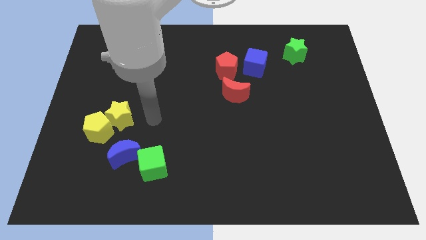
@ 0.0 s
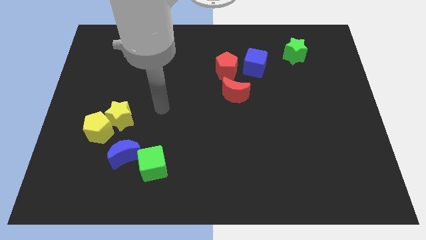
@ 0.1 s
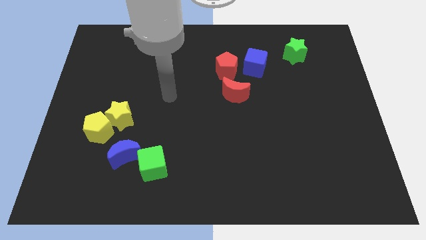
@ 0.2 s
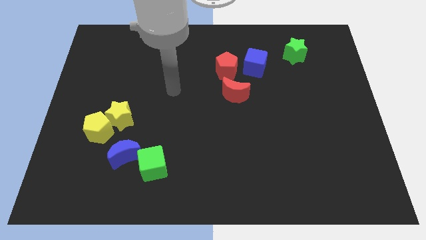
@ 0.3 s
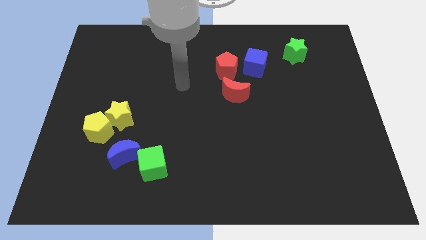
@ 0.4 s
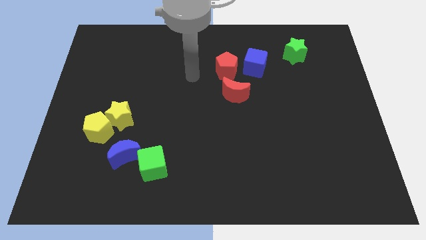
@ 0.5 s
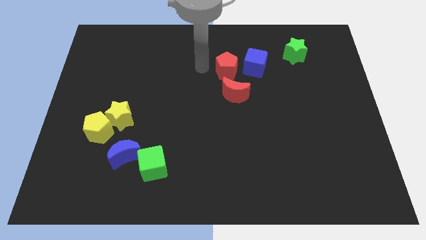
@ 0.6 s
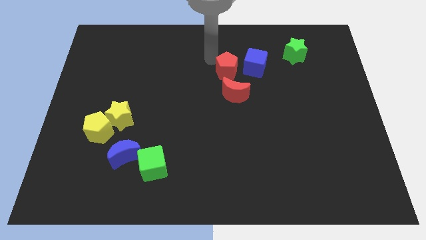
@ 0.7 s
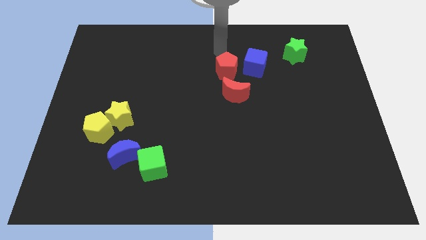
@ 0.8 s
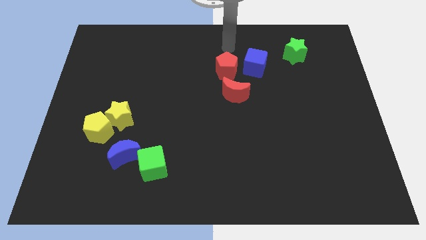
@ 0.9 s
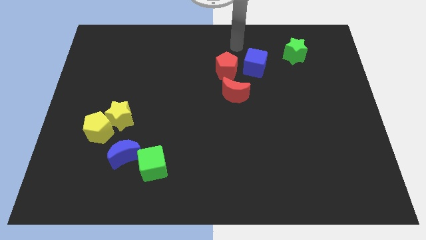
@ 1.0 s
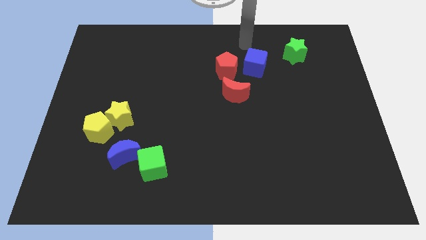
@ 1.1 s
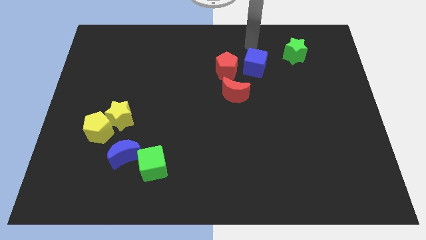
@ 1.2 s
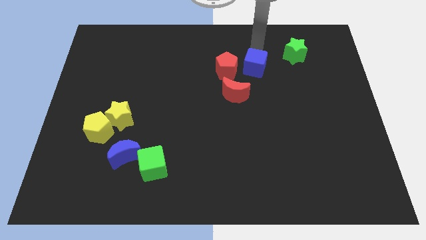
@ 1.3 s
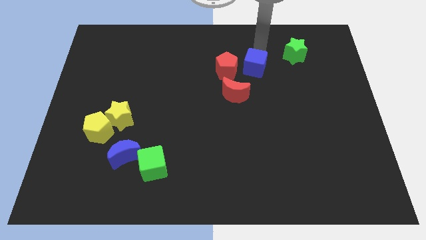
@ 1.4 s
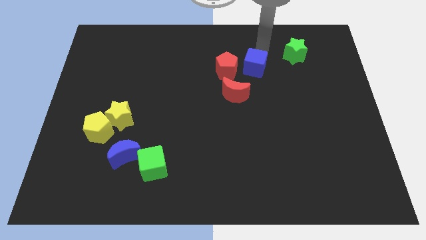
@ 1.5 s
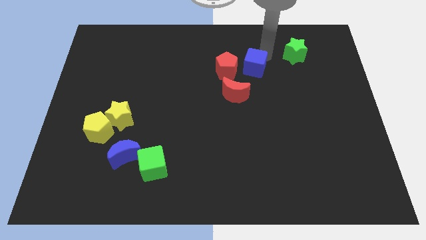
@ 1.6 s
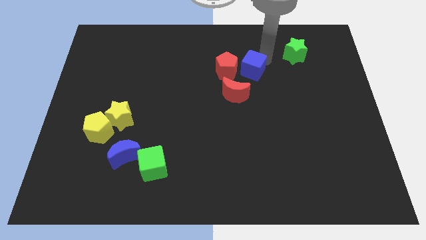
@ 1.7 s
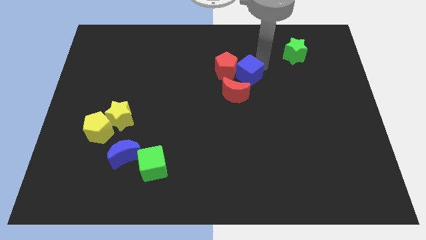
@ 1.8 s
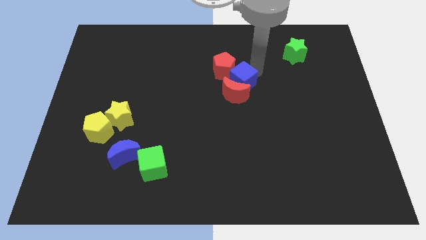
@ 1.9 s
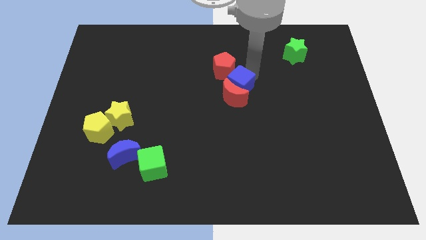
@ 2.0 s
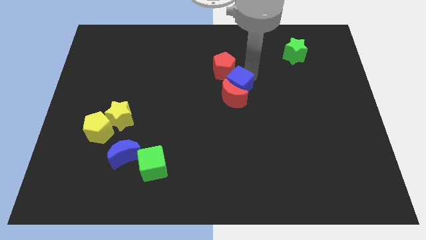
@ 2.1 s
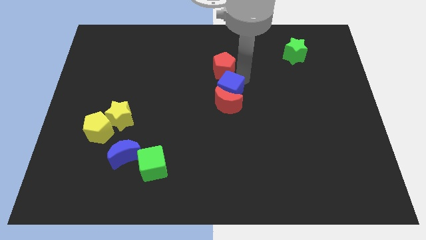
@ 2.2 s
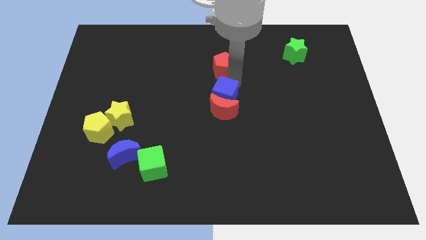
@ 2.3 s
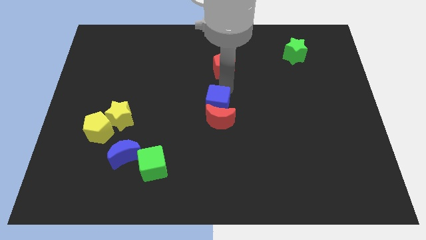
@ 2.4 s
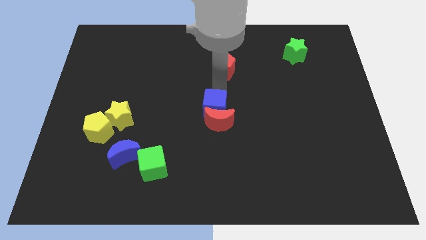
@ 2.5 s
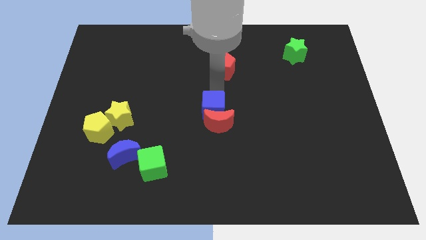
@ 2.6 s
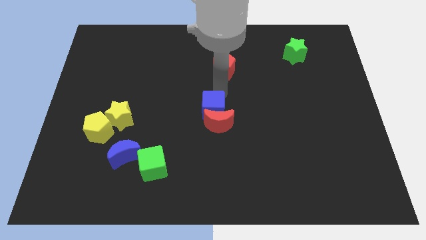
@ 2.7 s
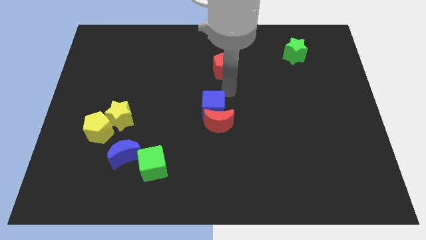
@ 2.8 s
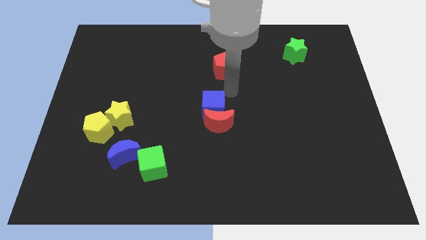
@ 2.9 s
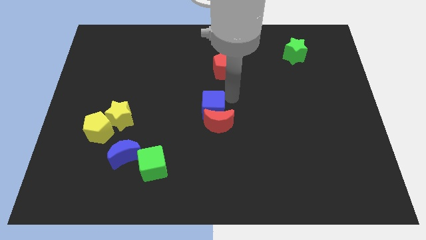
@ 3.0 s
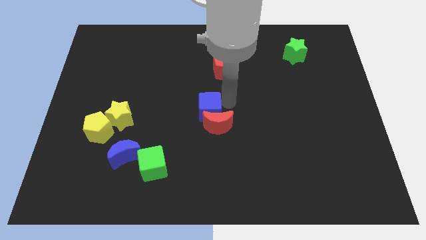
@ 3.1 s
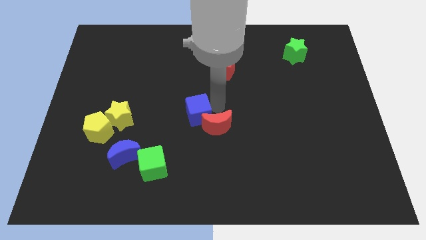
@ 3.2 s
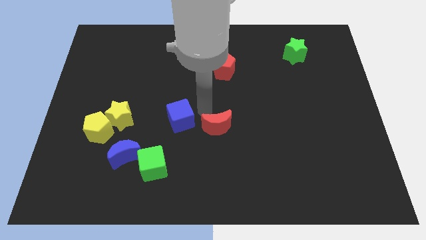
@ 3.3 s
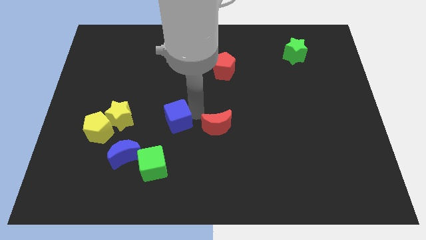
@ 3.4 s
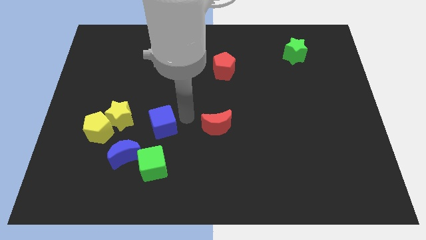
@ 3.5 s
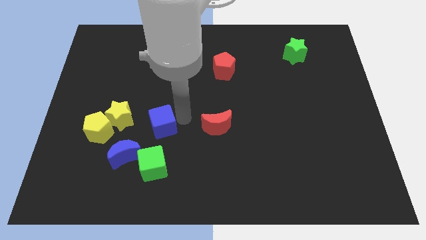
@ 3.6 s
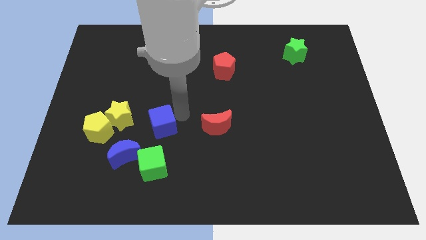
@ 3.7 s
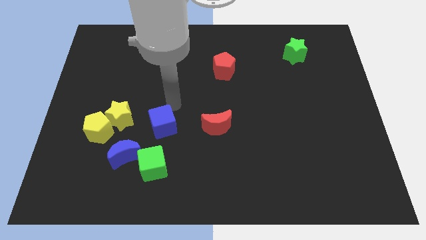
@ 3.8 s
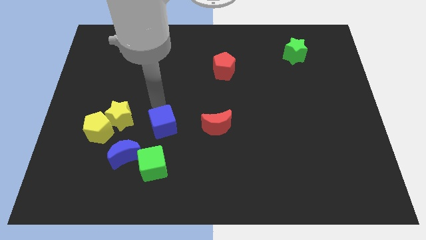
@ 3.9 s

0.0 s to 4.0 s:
place the blue square to the center of the board

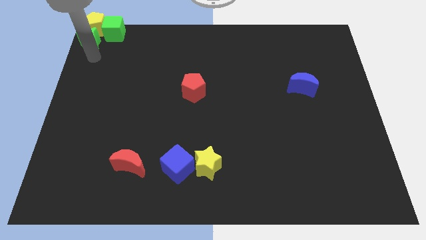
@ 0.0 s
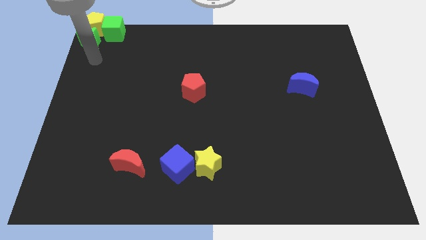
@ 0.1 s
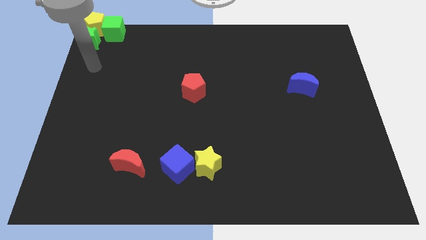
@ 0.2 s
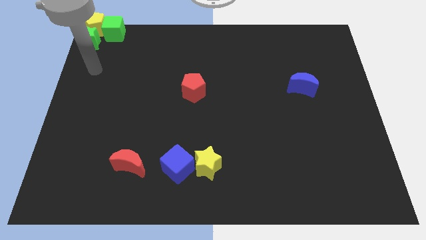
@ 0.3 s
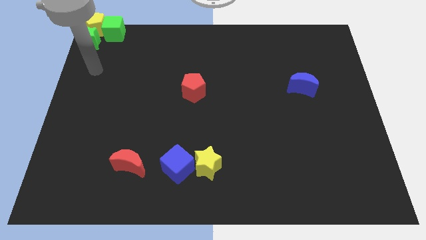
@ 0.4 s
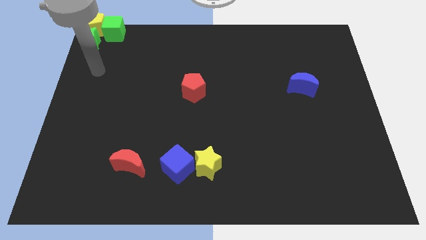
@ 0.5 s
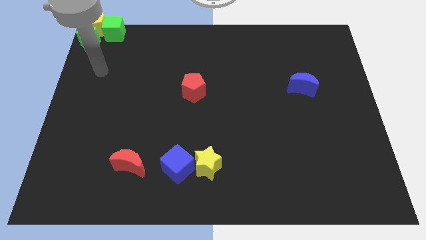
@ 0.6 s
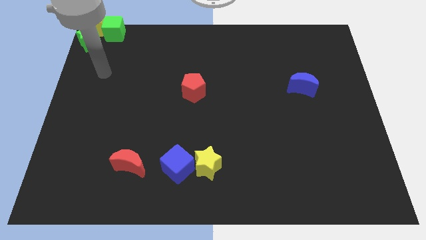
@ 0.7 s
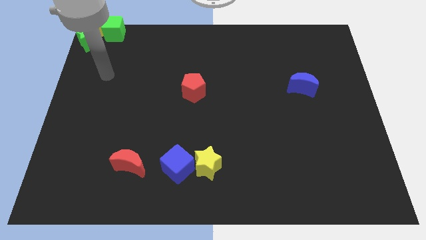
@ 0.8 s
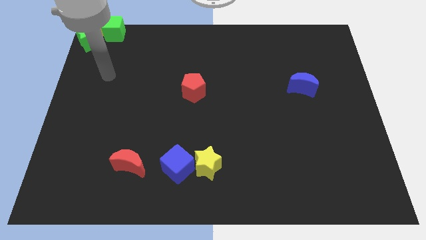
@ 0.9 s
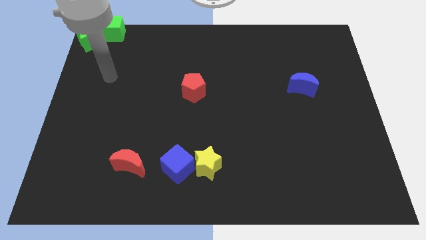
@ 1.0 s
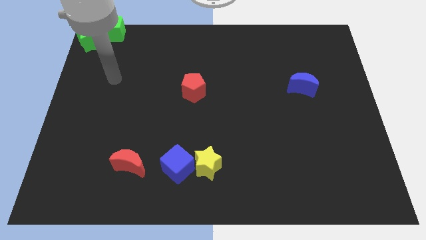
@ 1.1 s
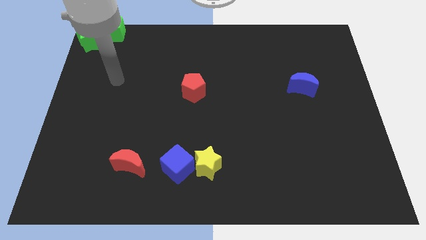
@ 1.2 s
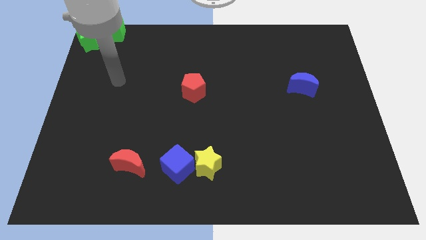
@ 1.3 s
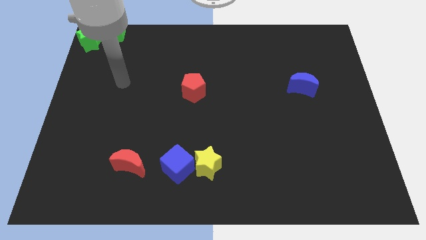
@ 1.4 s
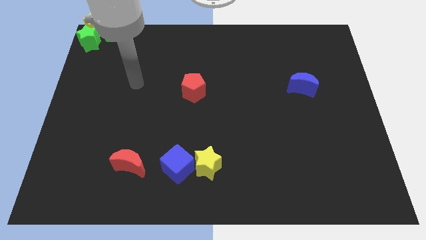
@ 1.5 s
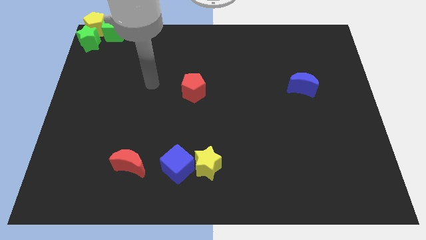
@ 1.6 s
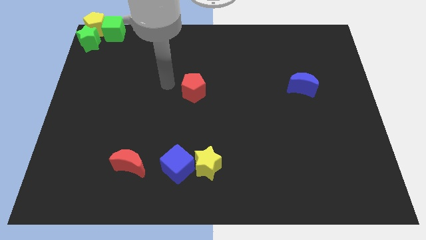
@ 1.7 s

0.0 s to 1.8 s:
point your arm to the left of red pentagon

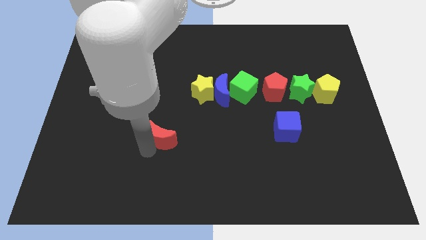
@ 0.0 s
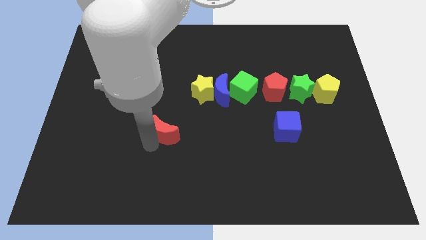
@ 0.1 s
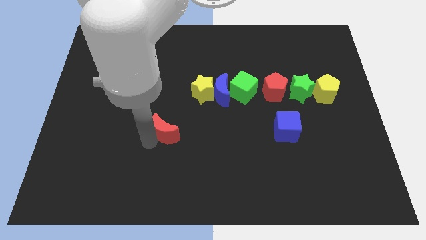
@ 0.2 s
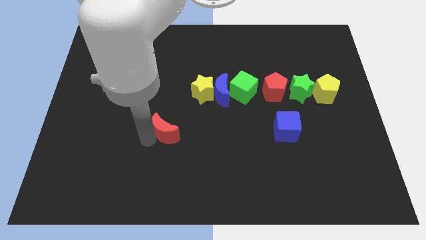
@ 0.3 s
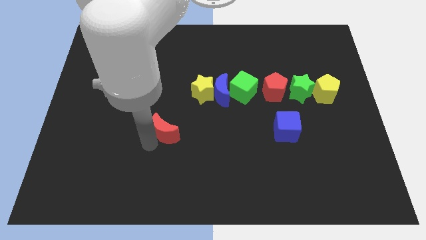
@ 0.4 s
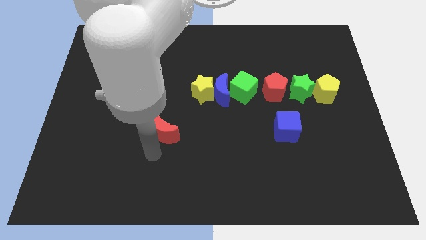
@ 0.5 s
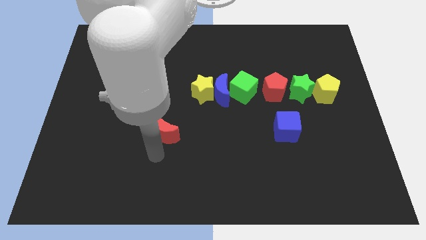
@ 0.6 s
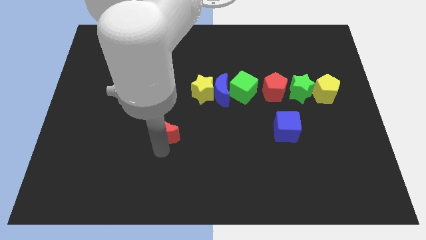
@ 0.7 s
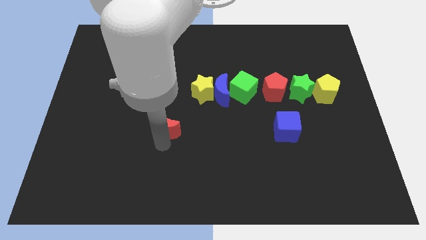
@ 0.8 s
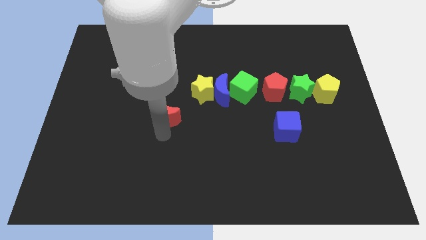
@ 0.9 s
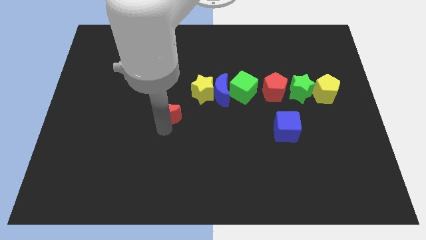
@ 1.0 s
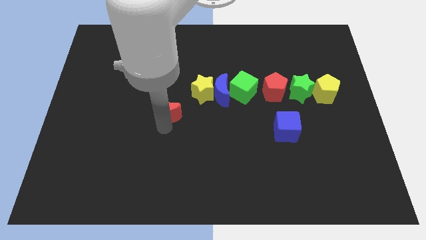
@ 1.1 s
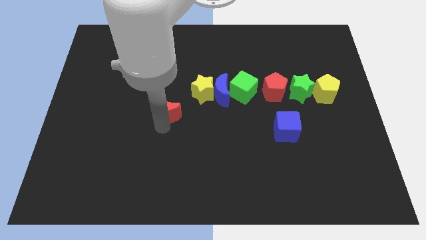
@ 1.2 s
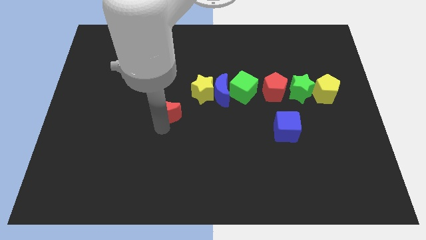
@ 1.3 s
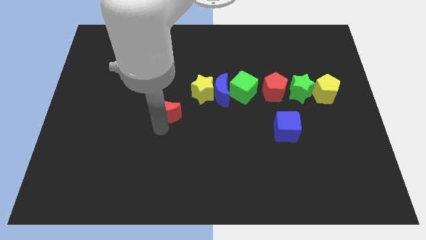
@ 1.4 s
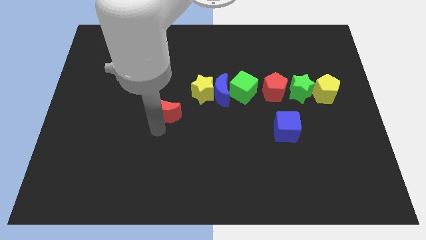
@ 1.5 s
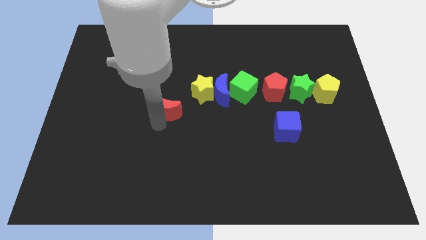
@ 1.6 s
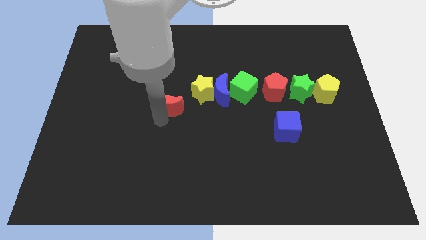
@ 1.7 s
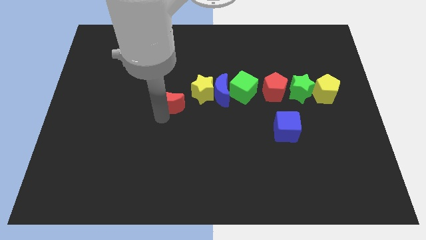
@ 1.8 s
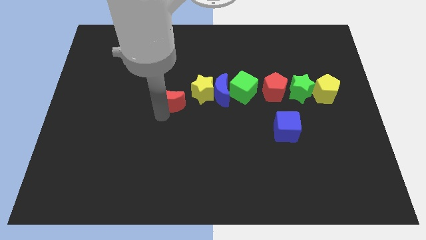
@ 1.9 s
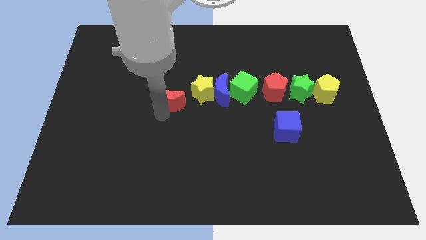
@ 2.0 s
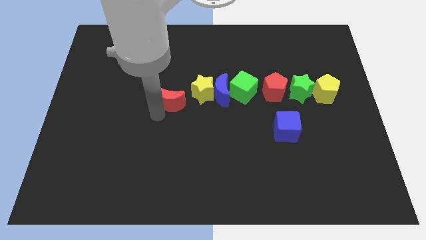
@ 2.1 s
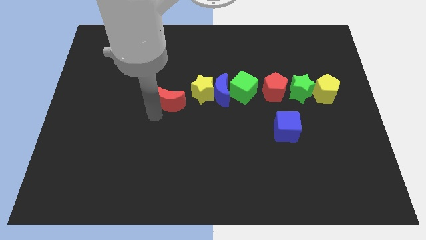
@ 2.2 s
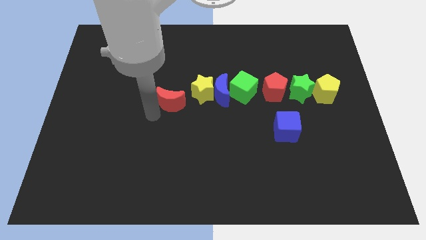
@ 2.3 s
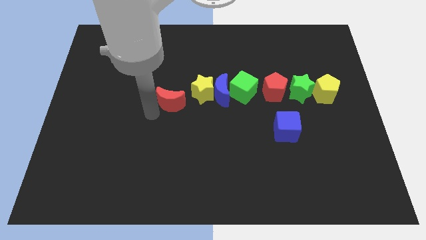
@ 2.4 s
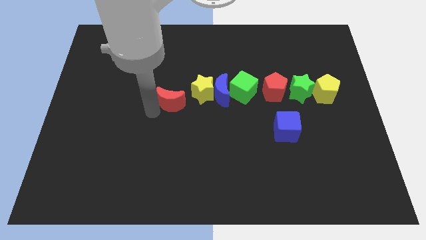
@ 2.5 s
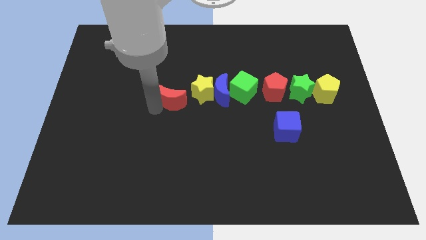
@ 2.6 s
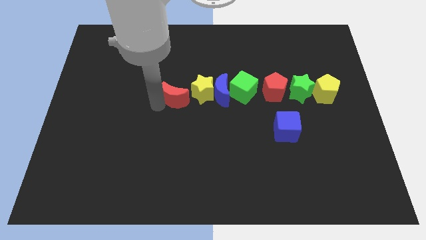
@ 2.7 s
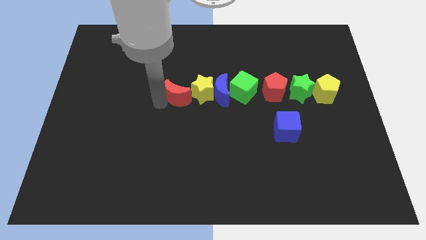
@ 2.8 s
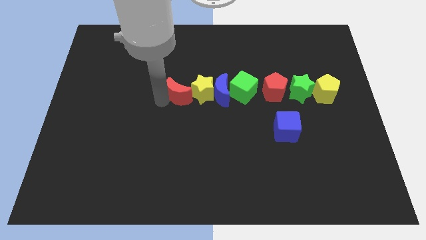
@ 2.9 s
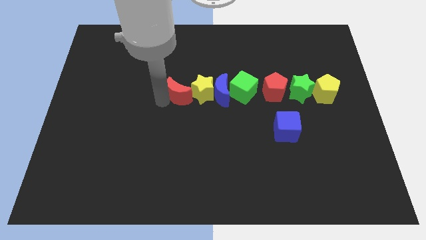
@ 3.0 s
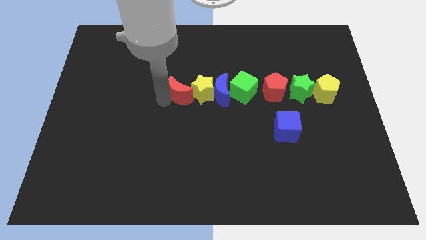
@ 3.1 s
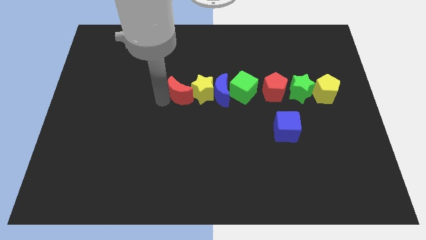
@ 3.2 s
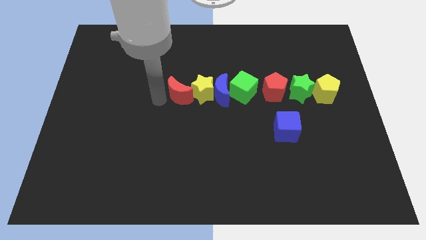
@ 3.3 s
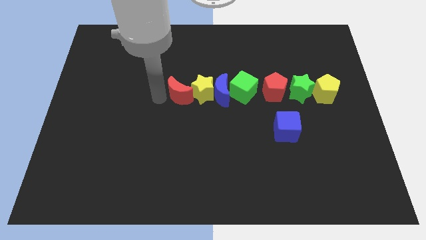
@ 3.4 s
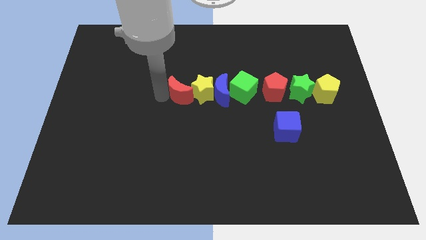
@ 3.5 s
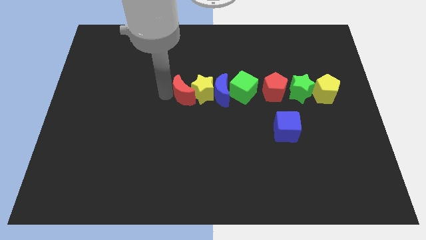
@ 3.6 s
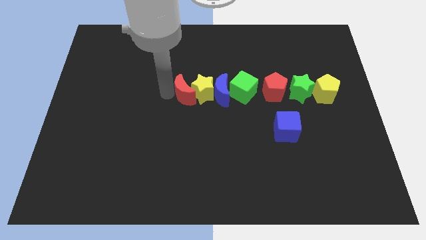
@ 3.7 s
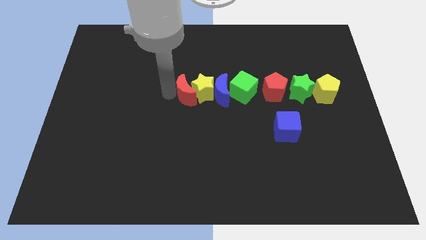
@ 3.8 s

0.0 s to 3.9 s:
move the red crescent into the yellow star
